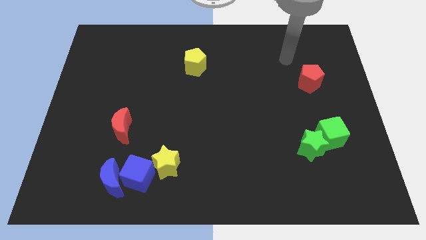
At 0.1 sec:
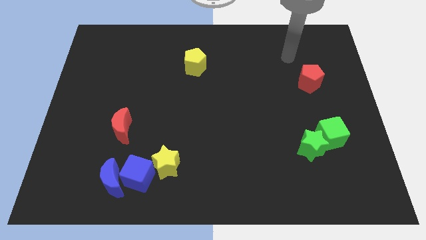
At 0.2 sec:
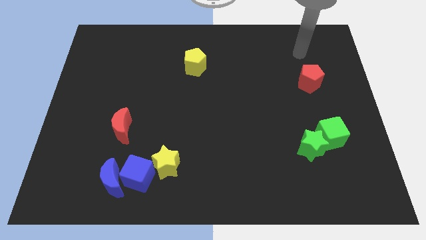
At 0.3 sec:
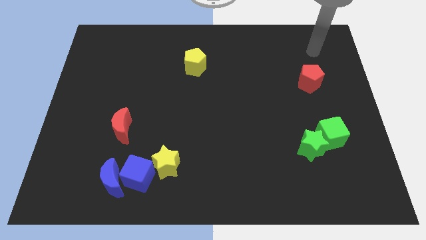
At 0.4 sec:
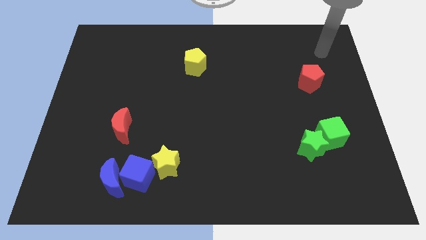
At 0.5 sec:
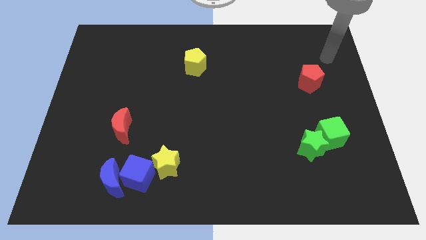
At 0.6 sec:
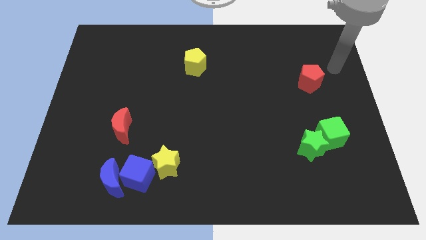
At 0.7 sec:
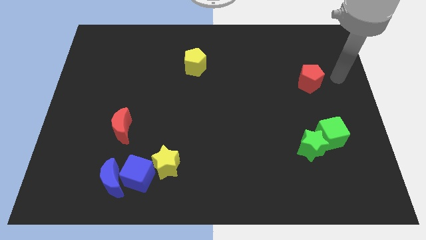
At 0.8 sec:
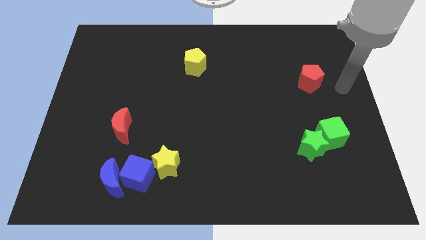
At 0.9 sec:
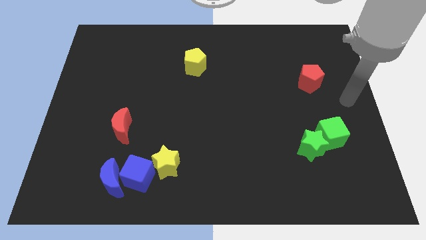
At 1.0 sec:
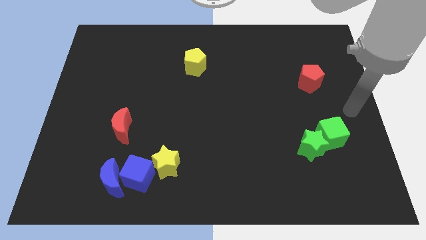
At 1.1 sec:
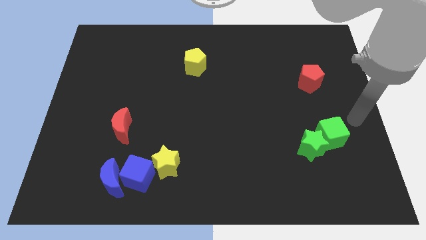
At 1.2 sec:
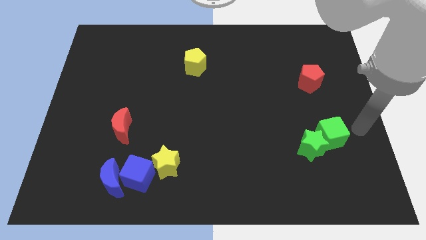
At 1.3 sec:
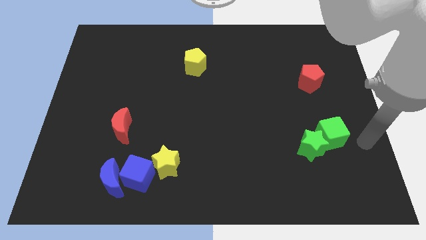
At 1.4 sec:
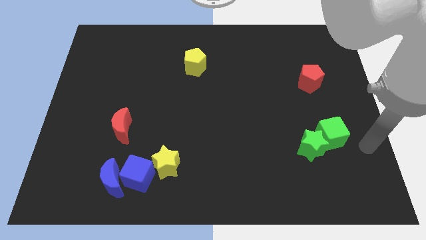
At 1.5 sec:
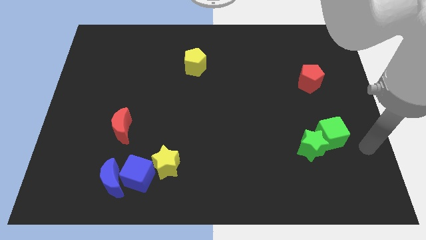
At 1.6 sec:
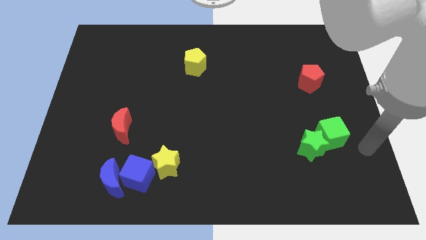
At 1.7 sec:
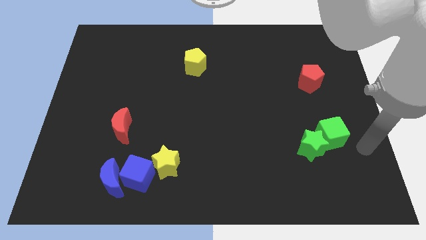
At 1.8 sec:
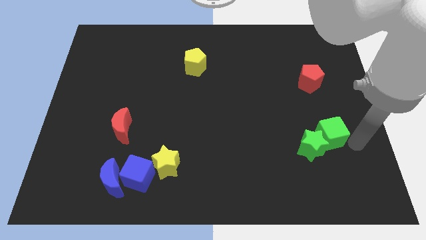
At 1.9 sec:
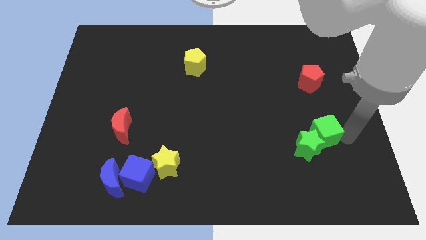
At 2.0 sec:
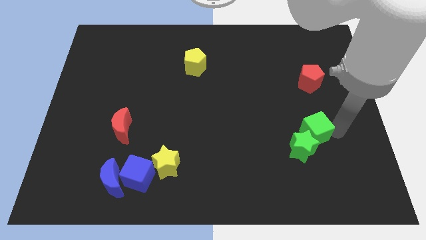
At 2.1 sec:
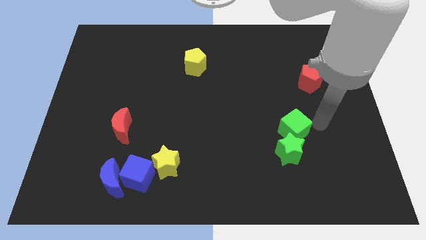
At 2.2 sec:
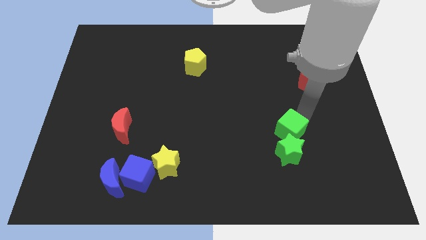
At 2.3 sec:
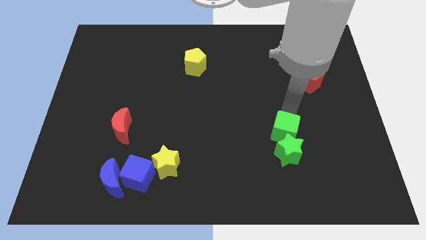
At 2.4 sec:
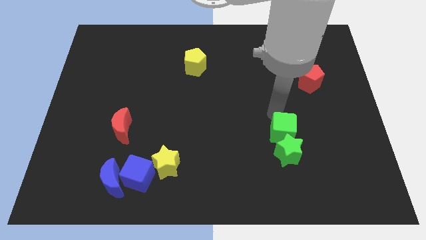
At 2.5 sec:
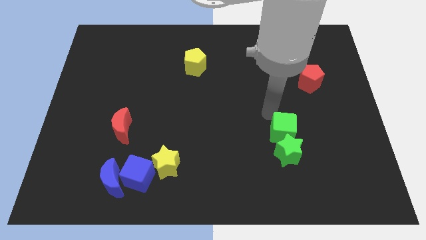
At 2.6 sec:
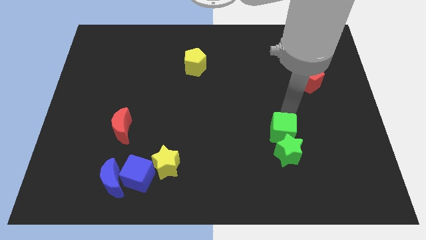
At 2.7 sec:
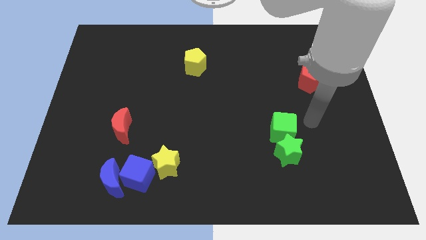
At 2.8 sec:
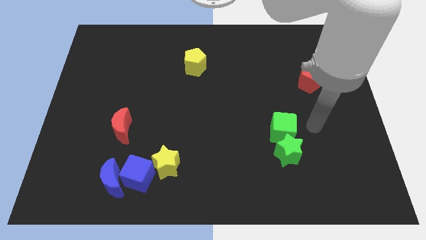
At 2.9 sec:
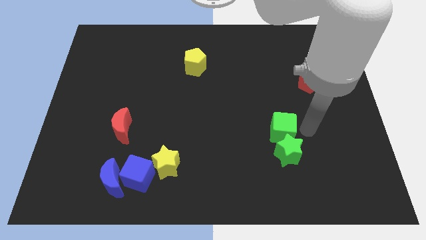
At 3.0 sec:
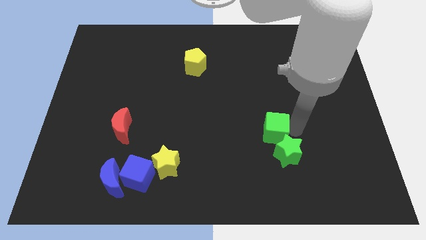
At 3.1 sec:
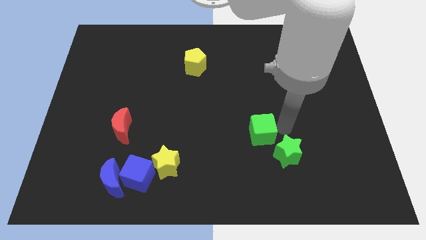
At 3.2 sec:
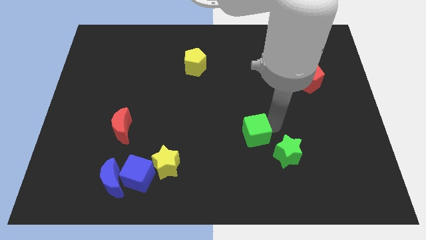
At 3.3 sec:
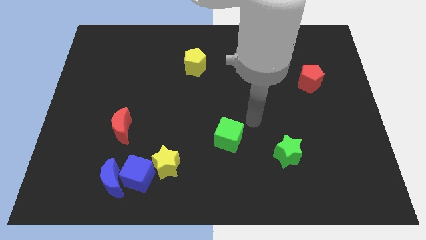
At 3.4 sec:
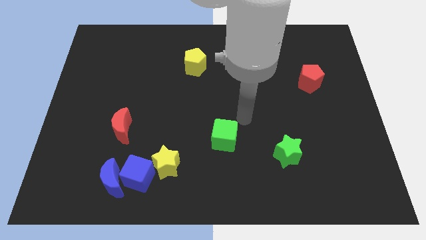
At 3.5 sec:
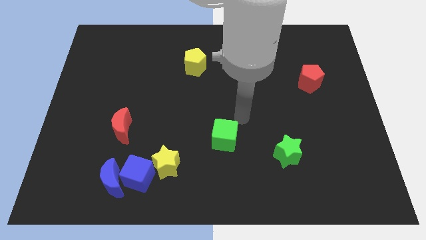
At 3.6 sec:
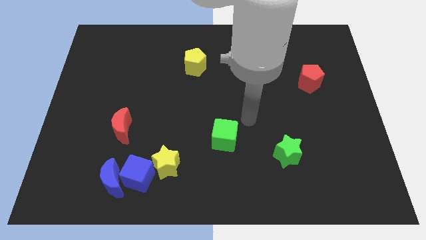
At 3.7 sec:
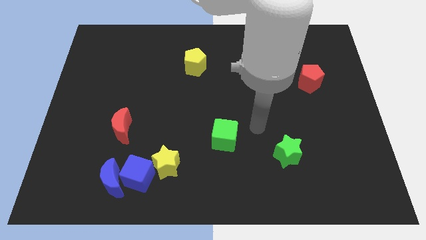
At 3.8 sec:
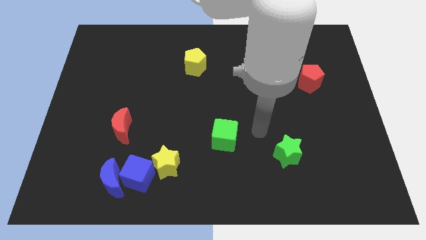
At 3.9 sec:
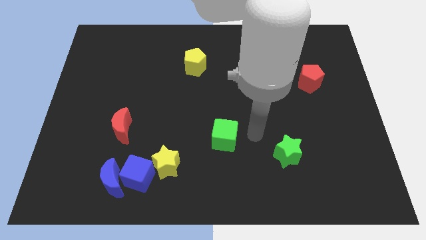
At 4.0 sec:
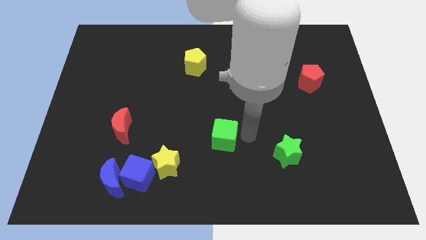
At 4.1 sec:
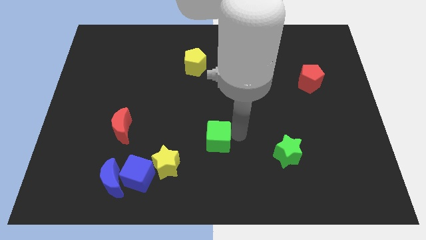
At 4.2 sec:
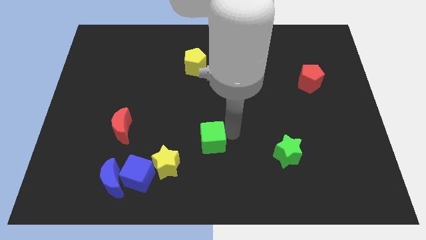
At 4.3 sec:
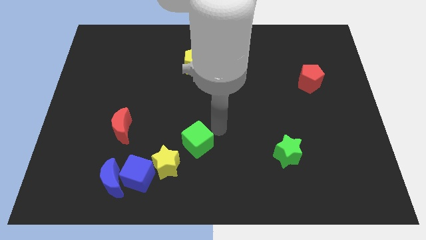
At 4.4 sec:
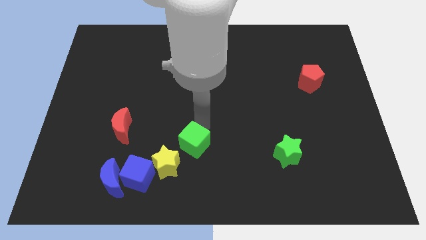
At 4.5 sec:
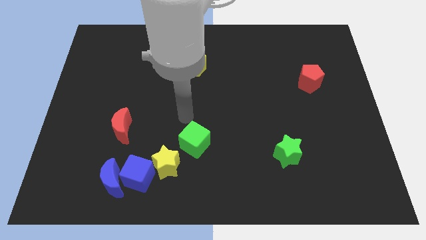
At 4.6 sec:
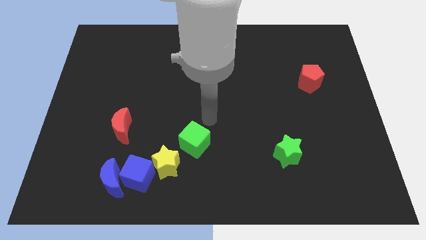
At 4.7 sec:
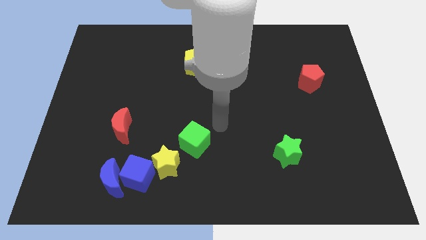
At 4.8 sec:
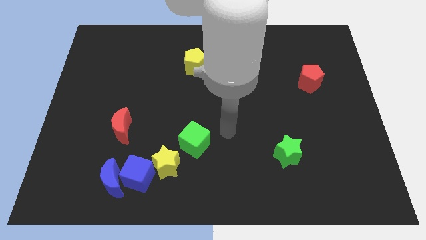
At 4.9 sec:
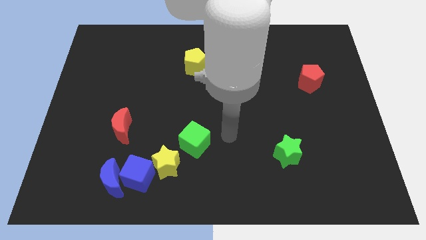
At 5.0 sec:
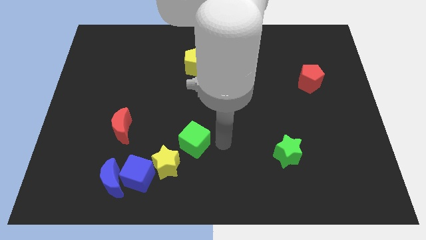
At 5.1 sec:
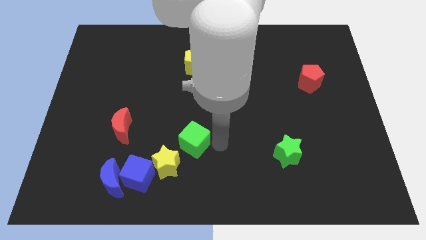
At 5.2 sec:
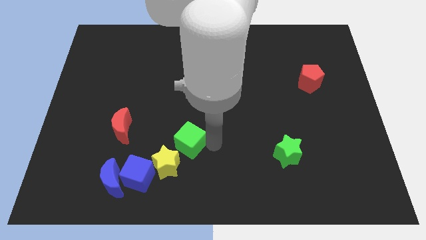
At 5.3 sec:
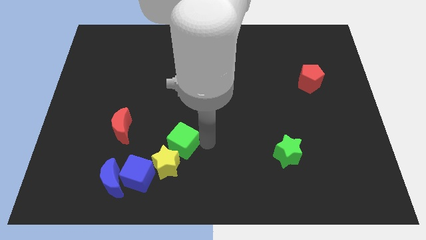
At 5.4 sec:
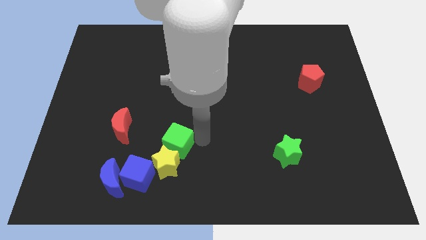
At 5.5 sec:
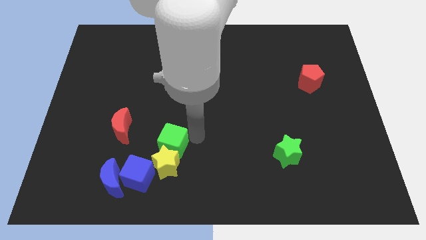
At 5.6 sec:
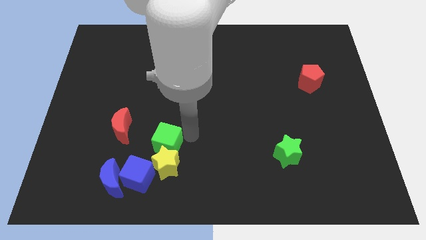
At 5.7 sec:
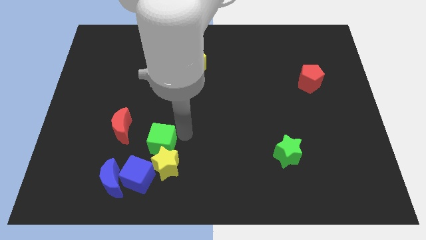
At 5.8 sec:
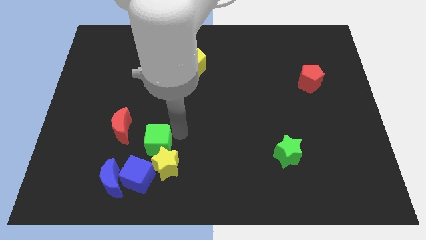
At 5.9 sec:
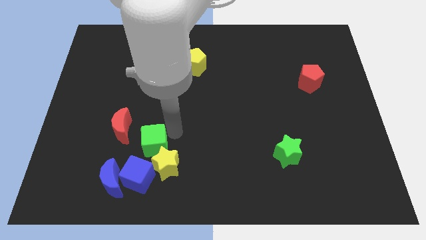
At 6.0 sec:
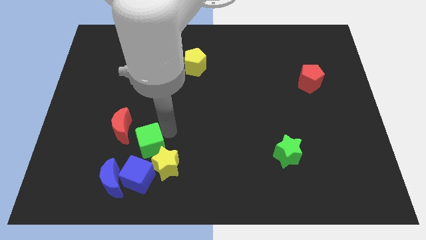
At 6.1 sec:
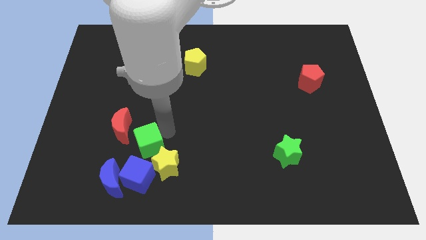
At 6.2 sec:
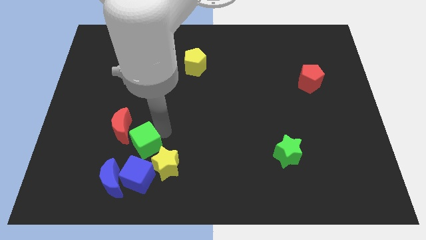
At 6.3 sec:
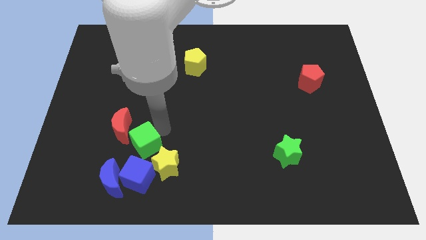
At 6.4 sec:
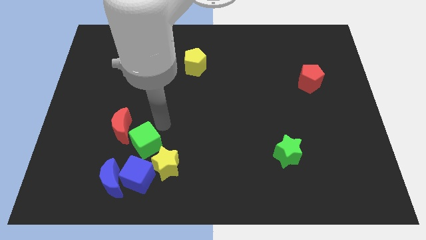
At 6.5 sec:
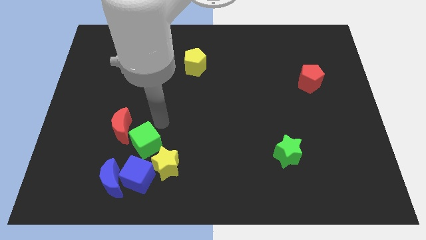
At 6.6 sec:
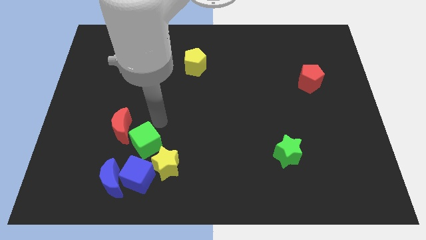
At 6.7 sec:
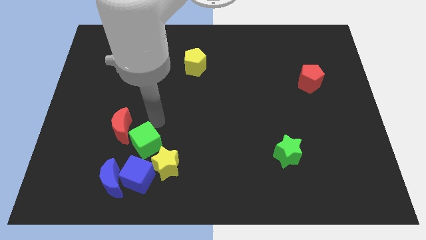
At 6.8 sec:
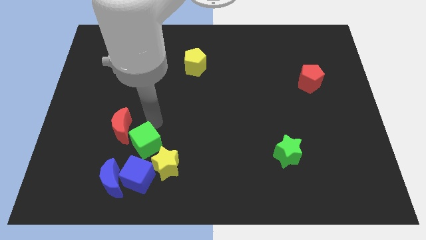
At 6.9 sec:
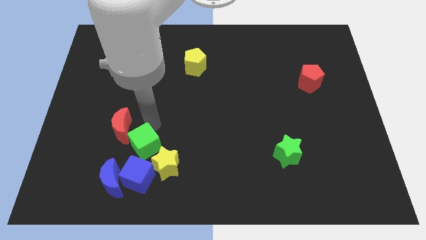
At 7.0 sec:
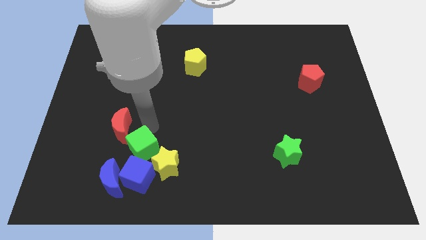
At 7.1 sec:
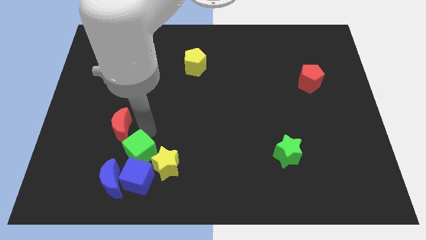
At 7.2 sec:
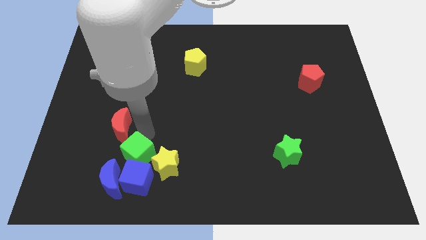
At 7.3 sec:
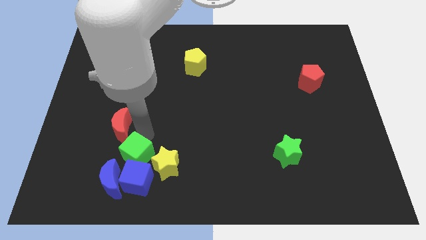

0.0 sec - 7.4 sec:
slide the green cube next to the blue cube

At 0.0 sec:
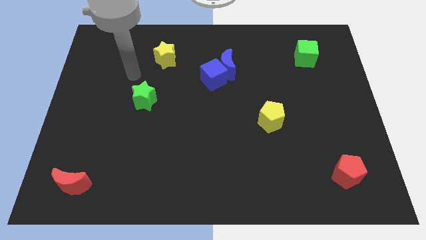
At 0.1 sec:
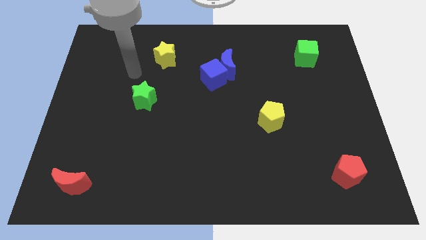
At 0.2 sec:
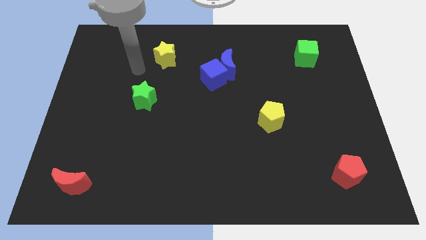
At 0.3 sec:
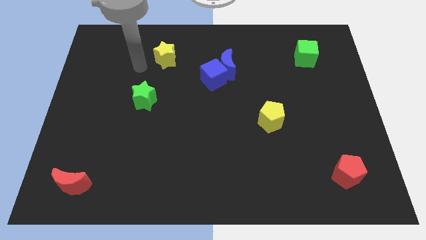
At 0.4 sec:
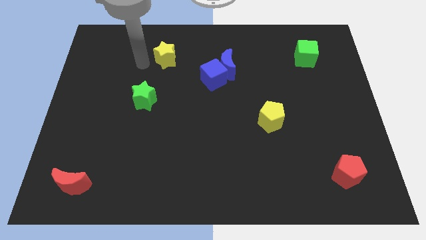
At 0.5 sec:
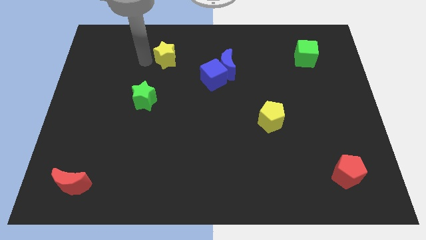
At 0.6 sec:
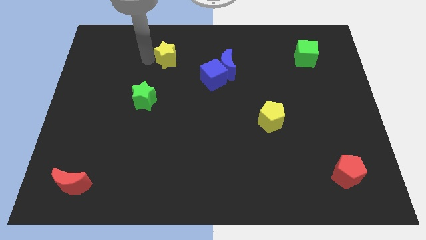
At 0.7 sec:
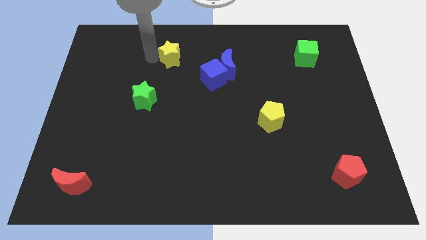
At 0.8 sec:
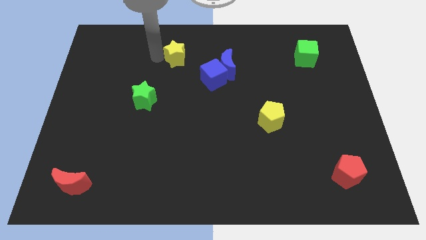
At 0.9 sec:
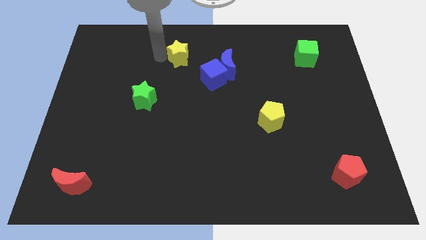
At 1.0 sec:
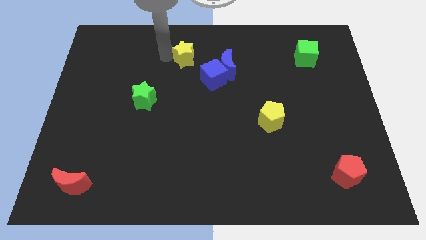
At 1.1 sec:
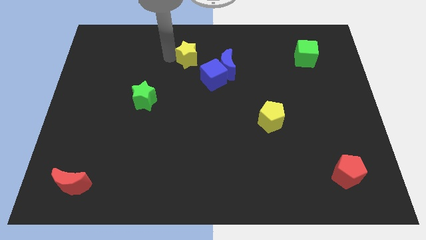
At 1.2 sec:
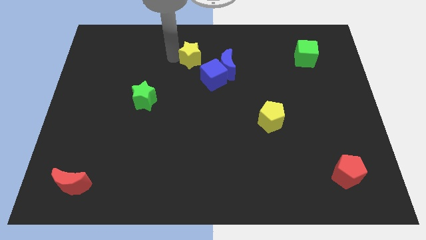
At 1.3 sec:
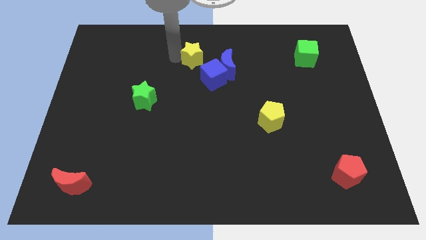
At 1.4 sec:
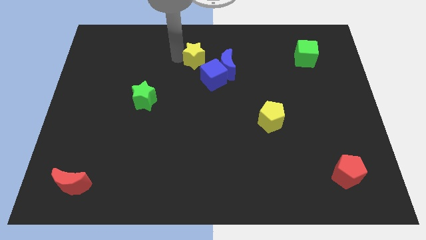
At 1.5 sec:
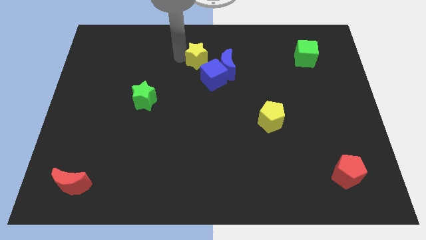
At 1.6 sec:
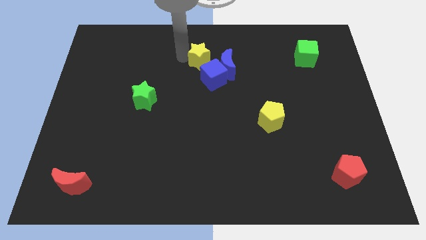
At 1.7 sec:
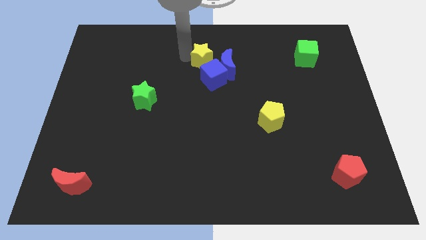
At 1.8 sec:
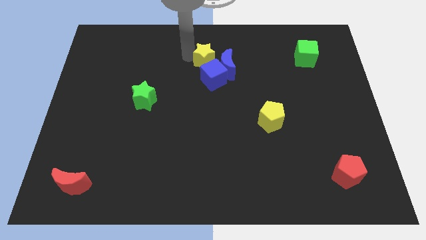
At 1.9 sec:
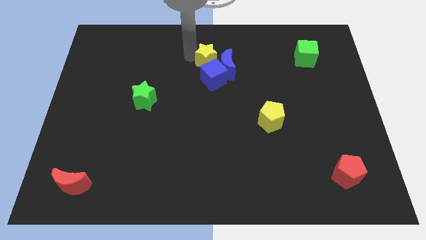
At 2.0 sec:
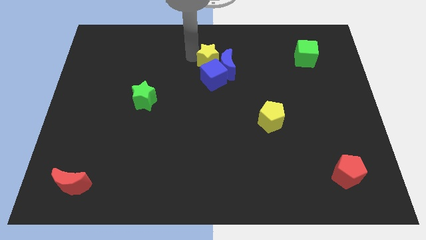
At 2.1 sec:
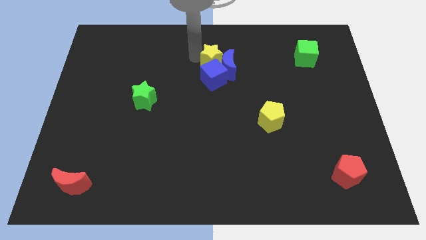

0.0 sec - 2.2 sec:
slide the yellow star to the blue moon
